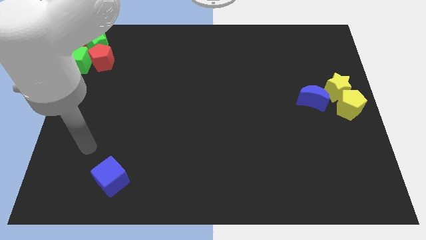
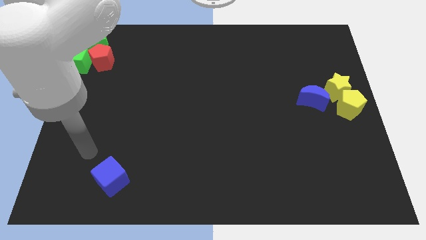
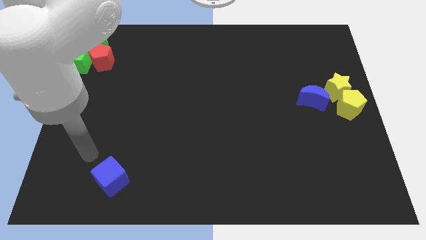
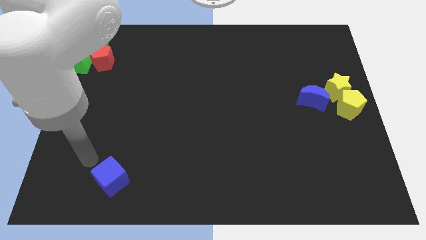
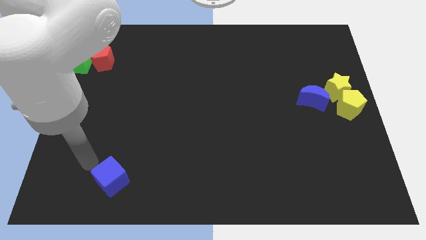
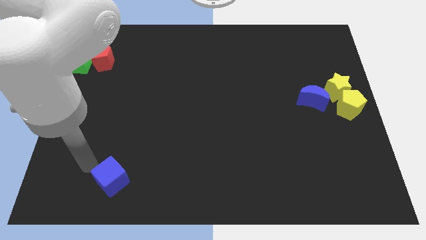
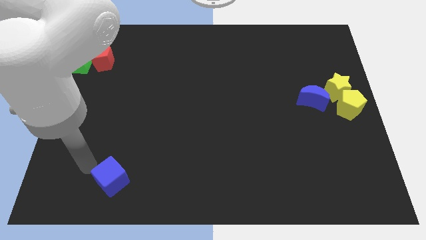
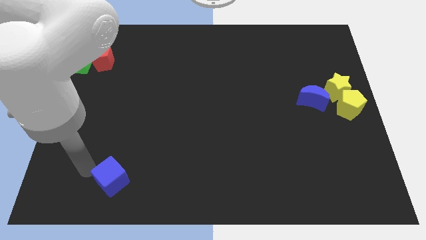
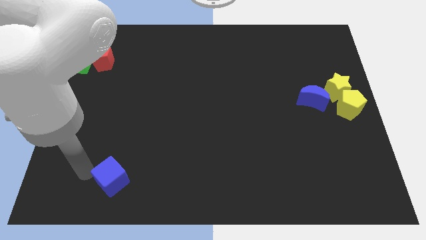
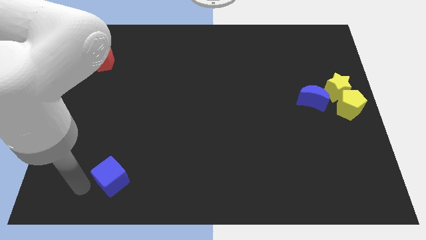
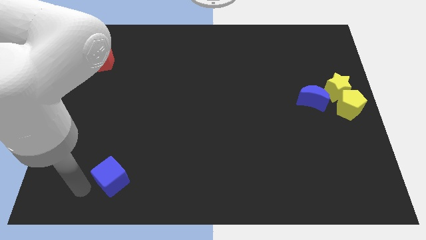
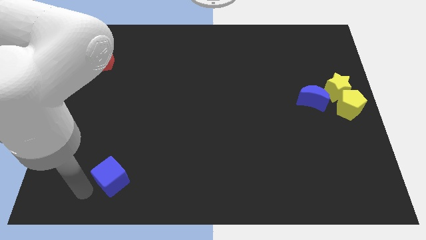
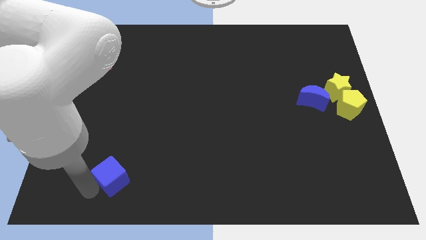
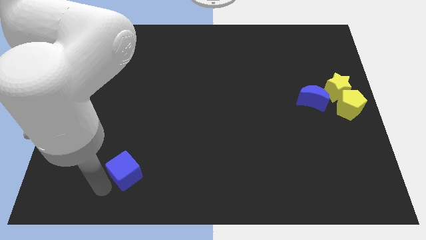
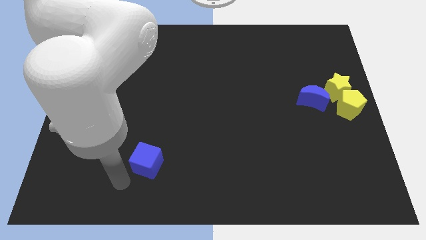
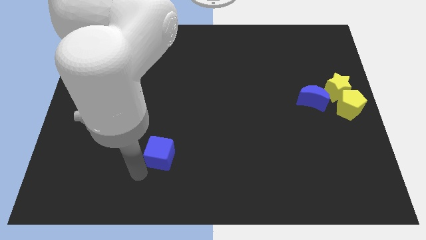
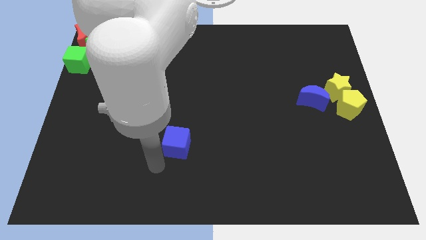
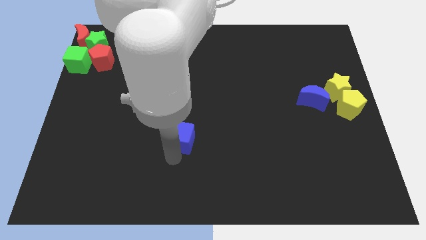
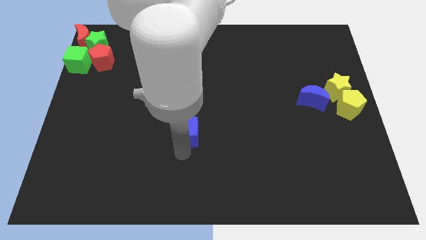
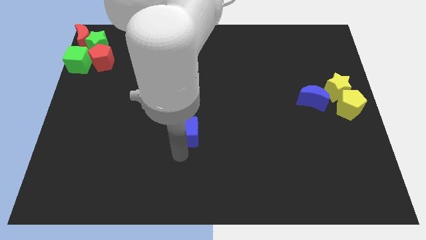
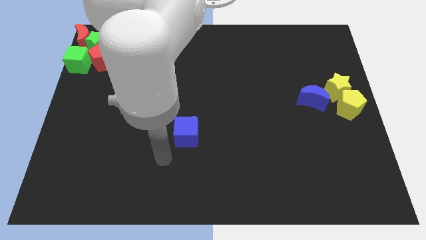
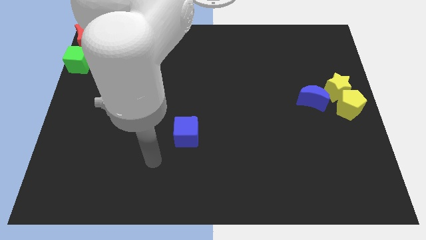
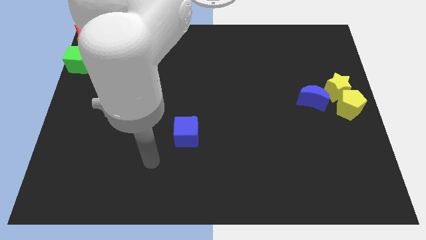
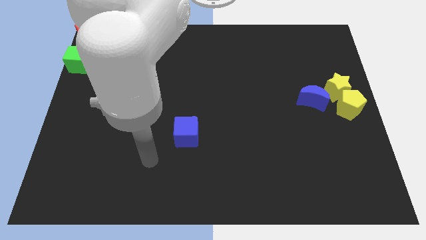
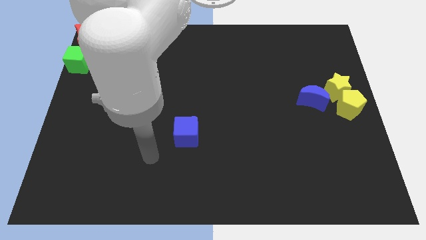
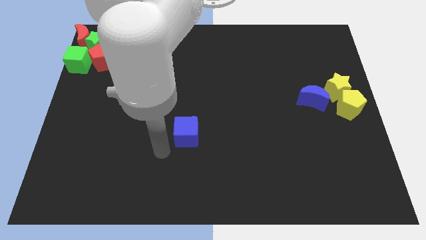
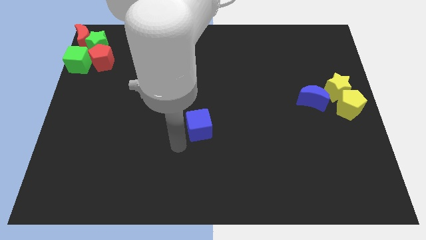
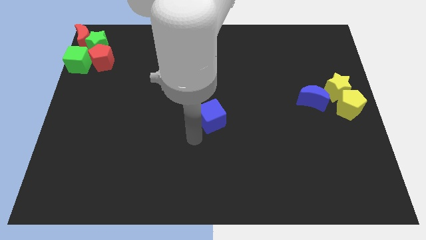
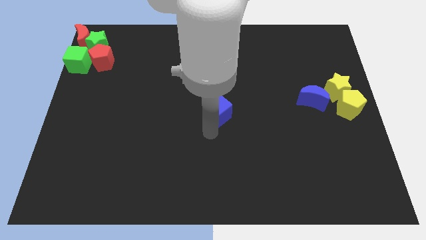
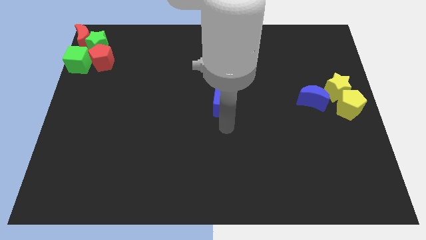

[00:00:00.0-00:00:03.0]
push the blue cube to the center of the board

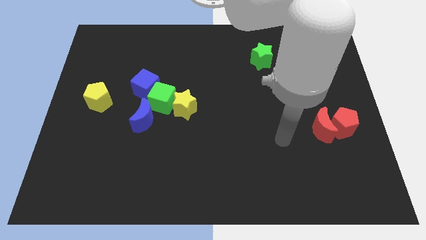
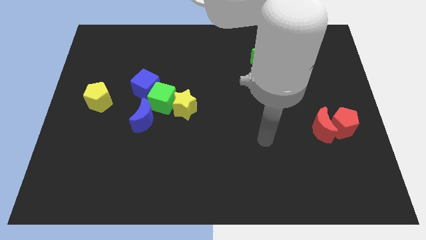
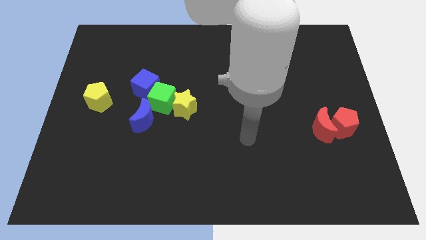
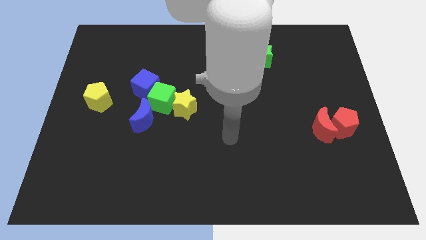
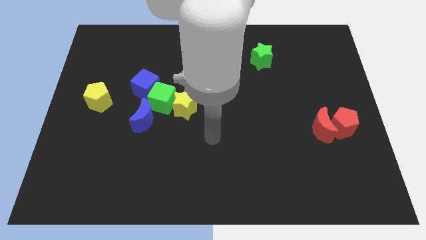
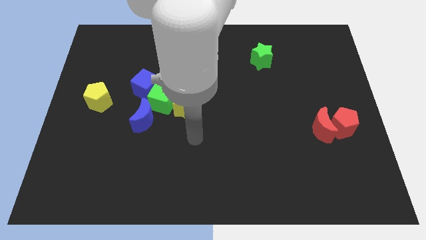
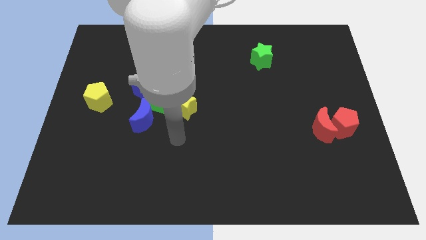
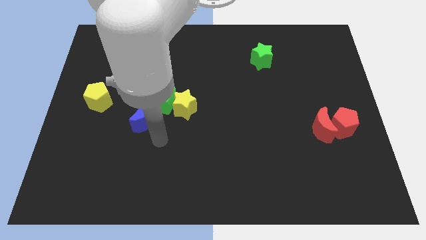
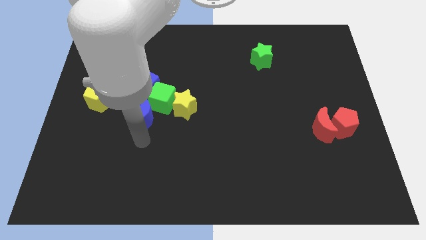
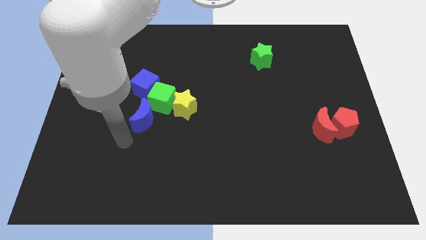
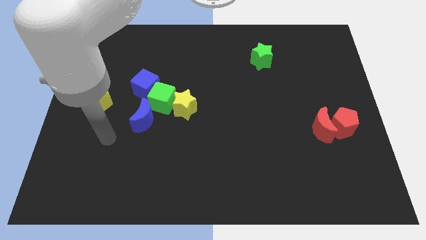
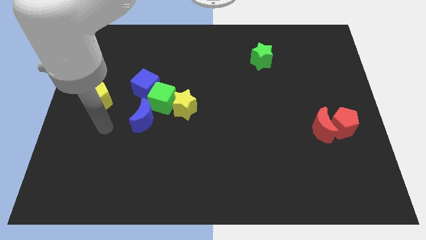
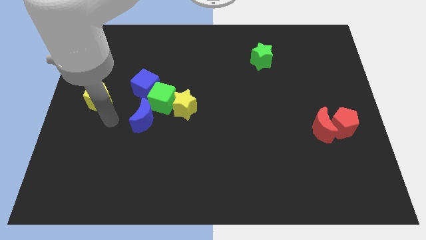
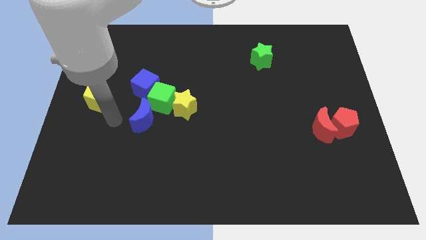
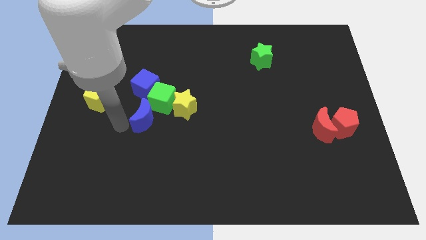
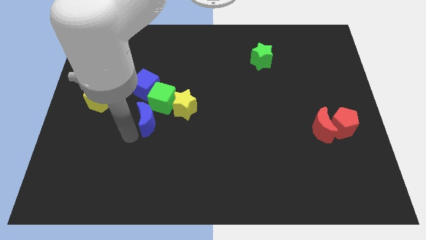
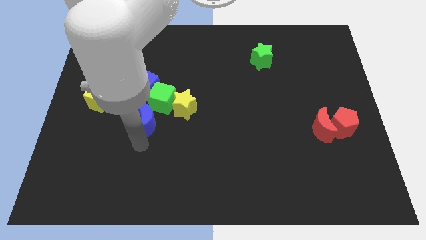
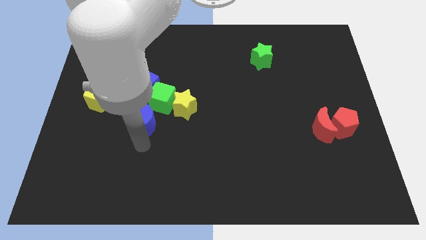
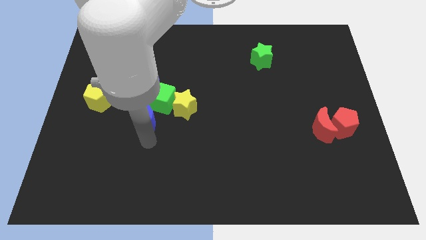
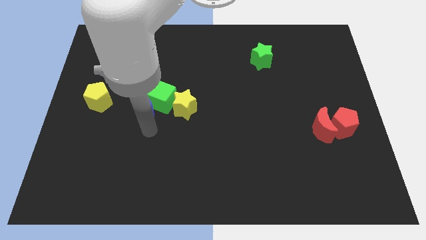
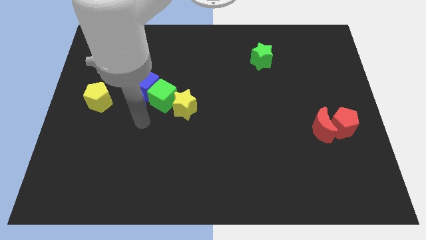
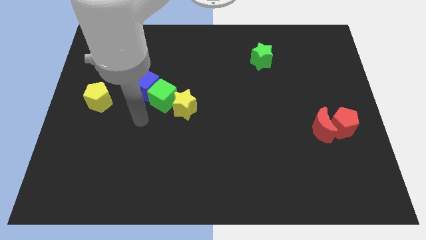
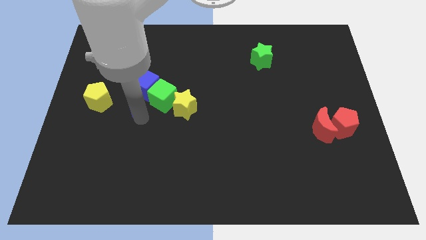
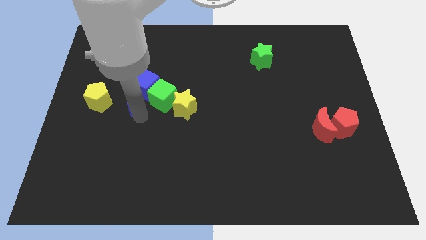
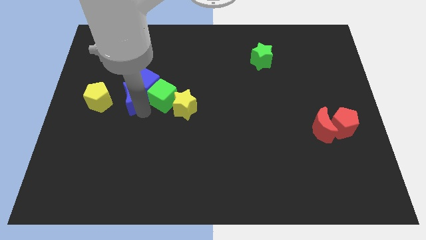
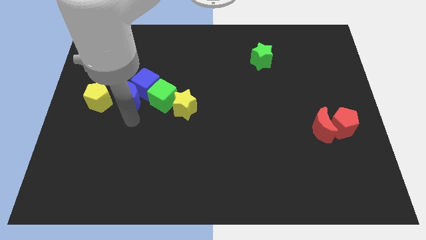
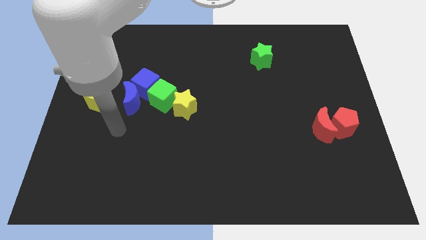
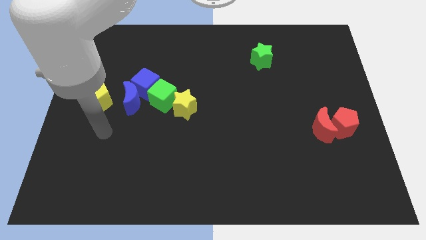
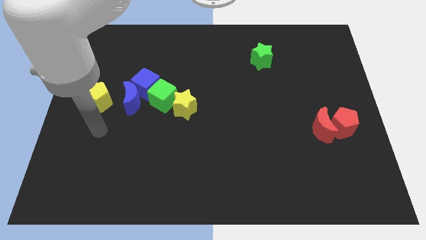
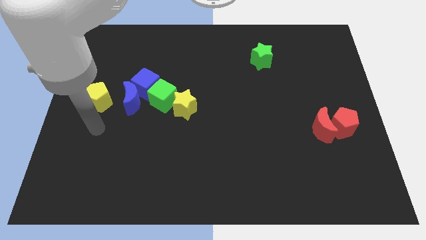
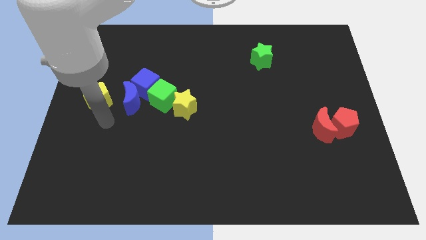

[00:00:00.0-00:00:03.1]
push the blue moon into the blue cube

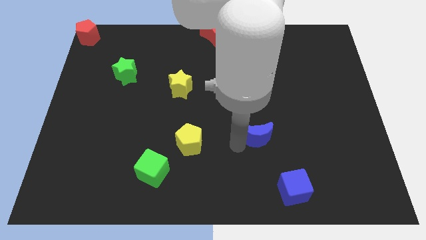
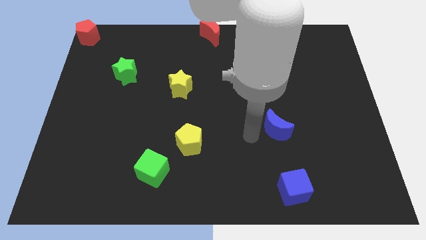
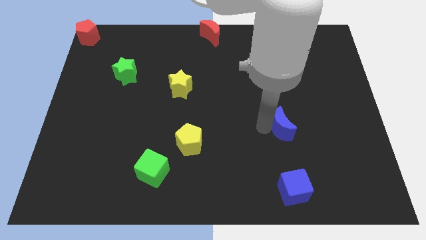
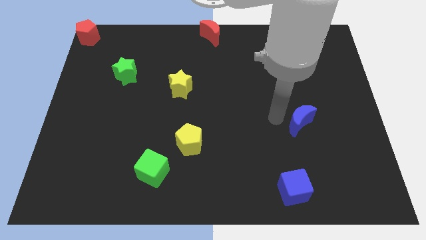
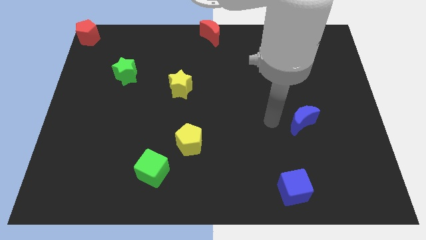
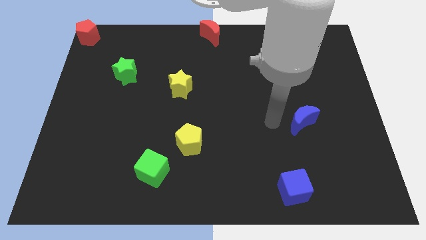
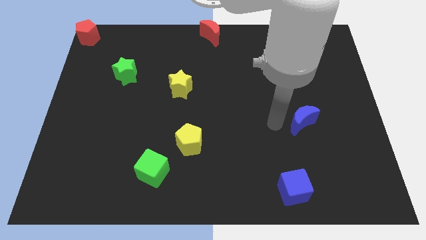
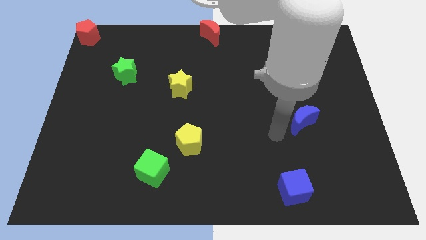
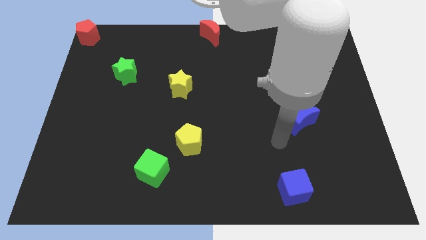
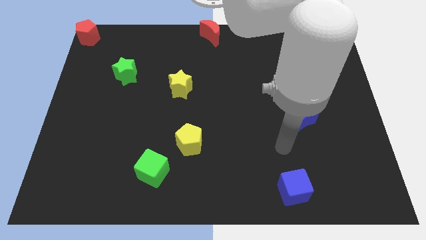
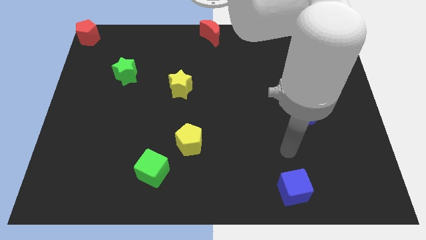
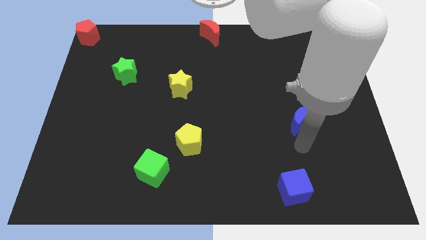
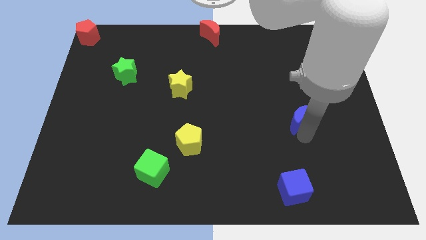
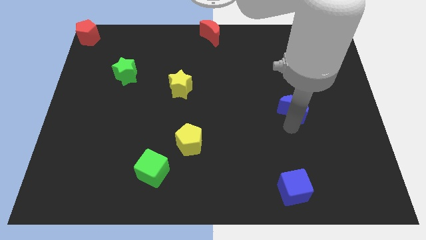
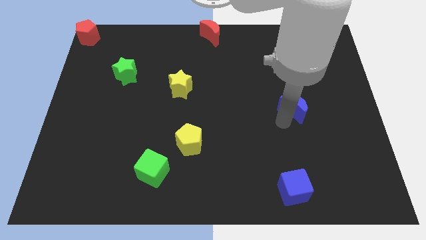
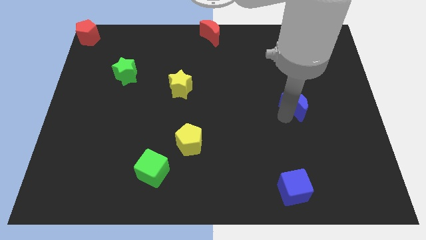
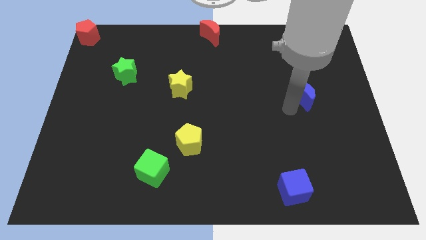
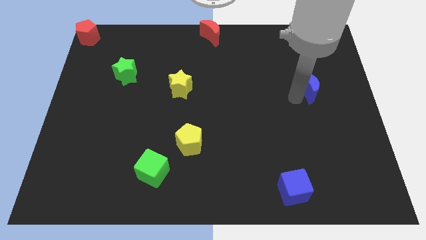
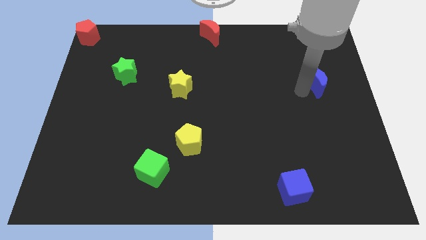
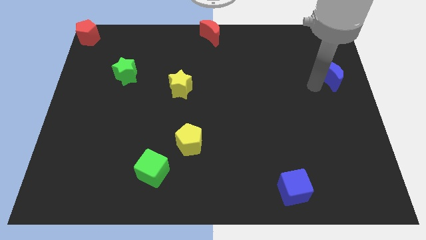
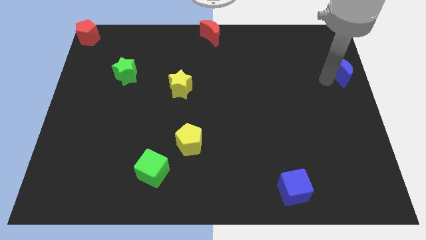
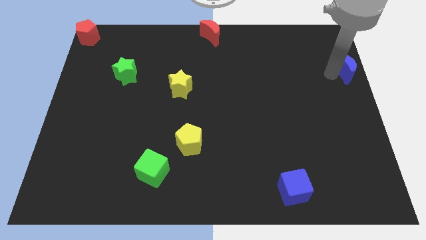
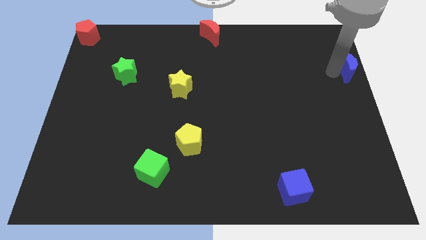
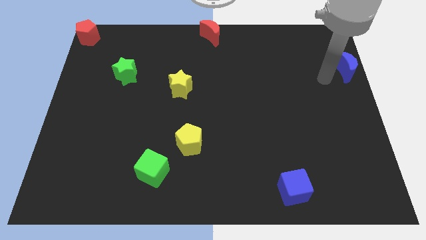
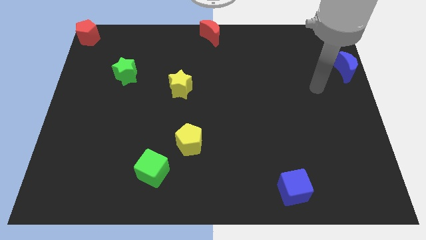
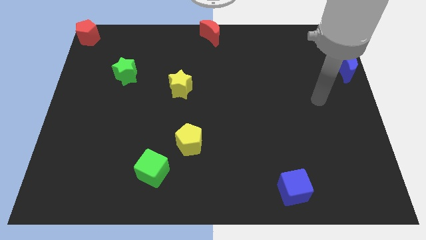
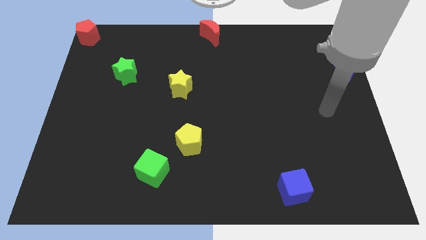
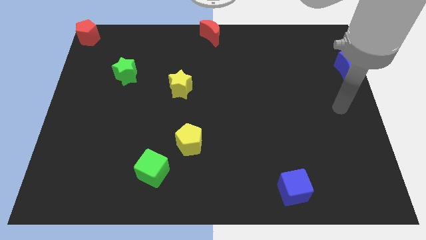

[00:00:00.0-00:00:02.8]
move blue crescent towards top right

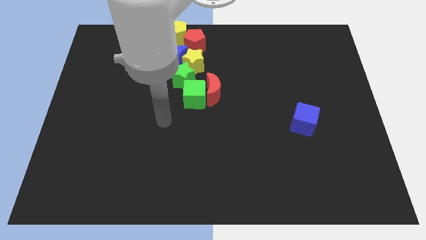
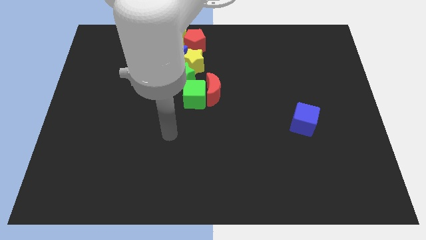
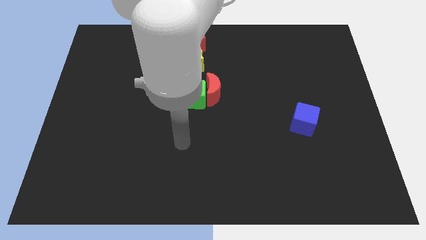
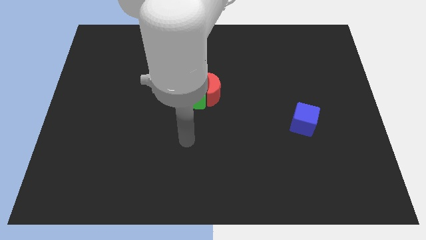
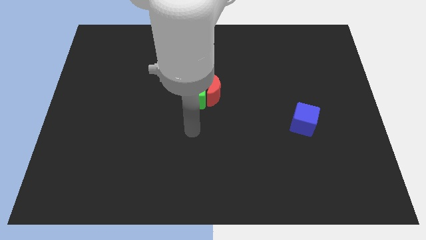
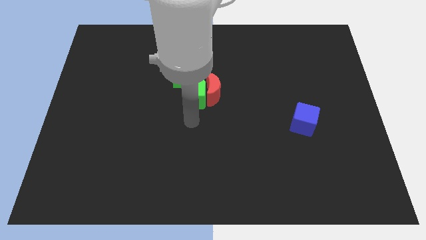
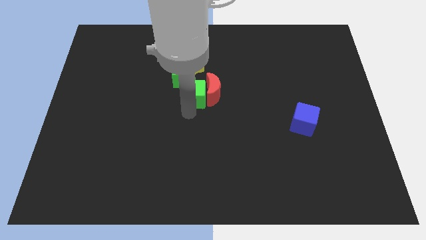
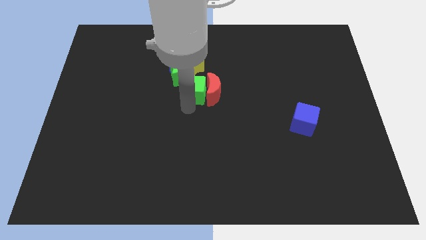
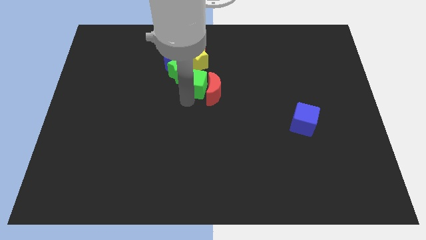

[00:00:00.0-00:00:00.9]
move your arm close to the green cube
